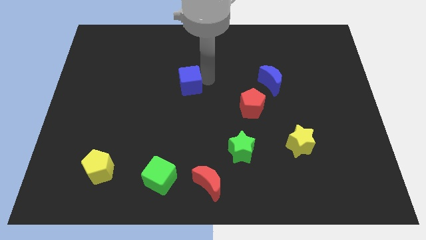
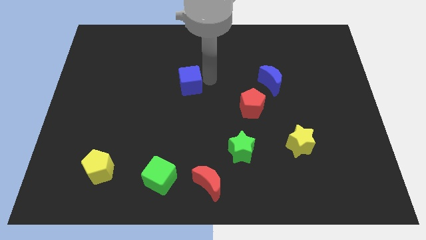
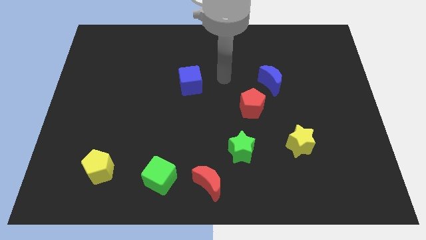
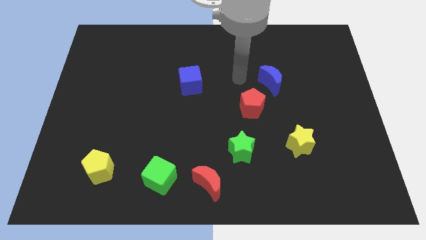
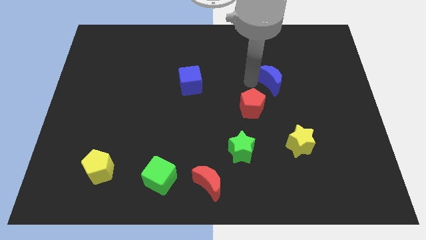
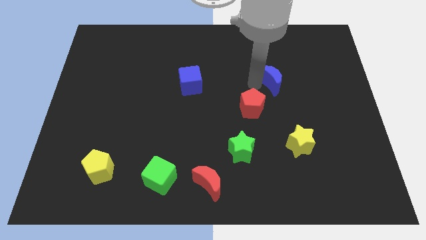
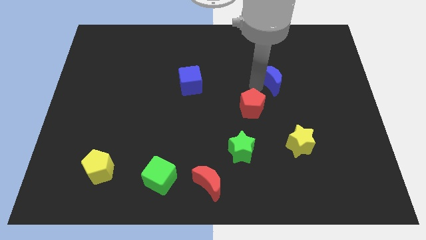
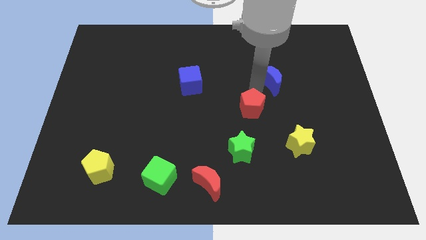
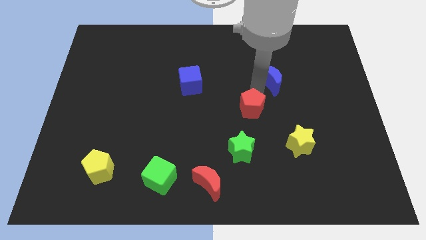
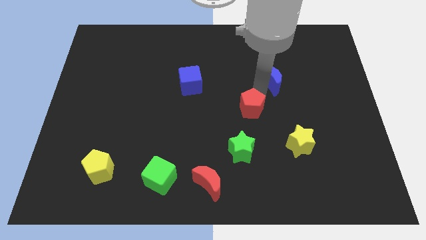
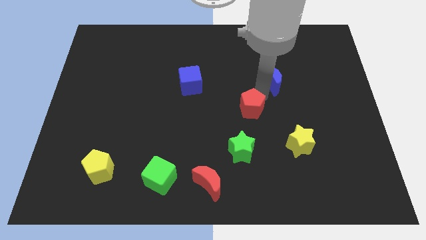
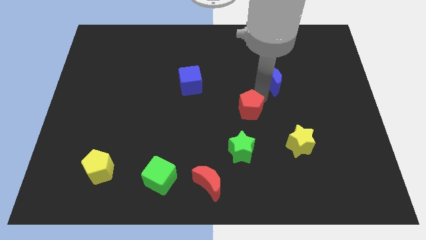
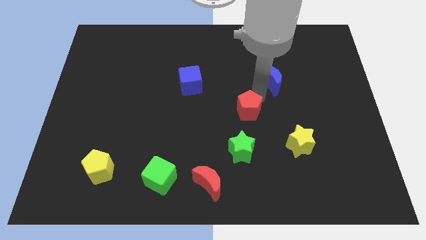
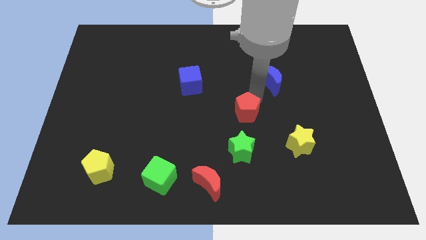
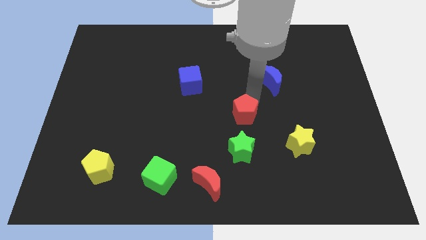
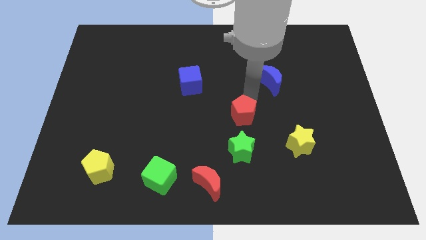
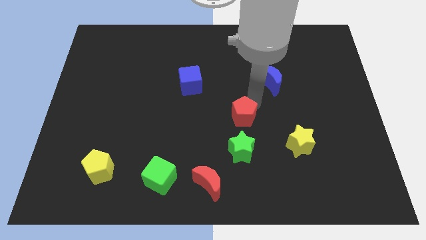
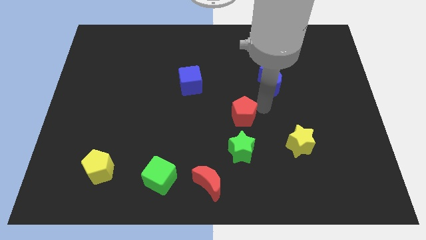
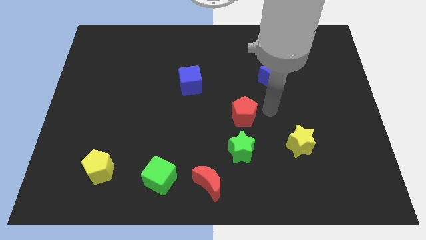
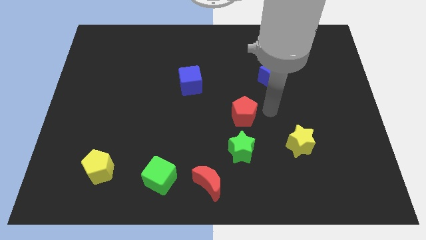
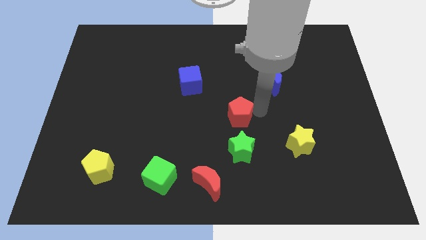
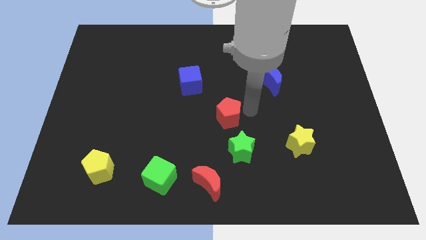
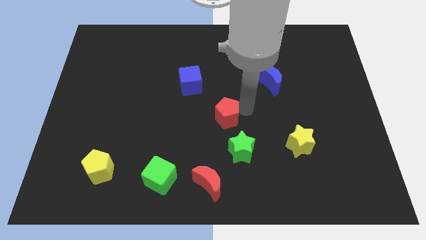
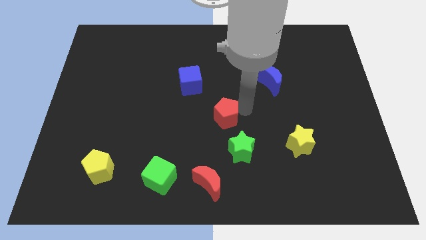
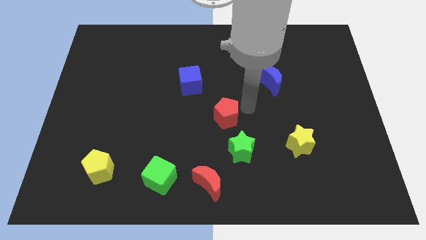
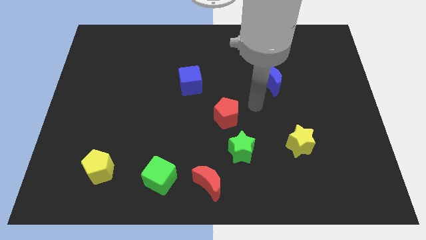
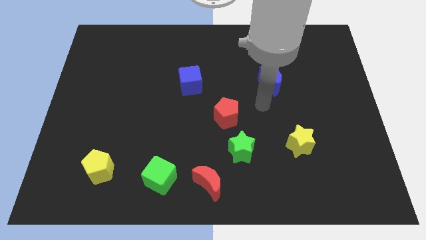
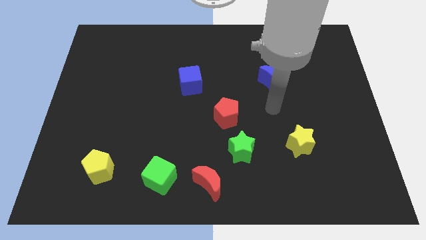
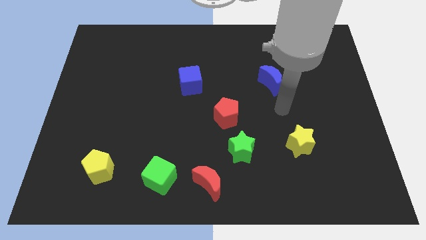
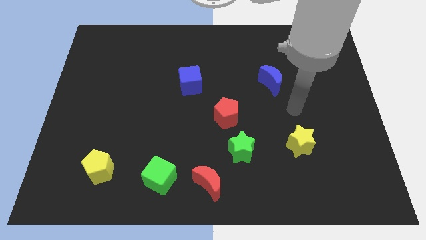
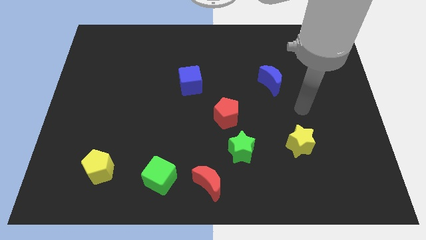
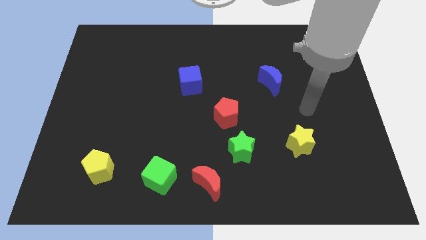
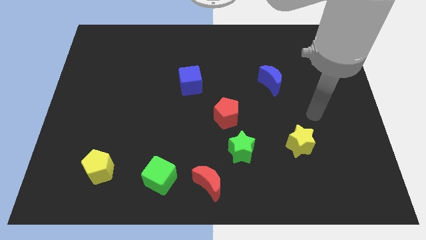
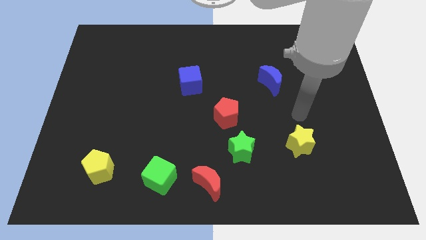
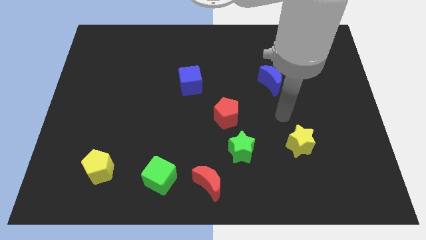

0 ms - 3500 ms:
push the red pentagon towards the center of the board

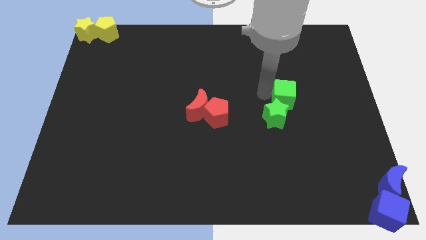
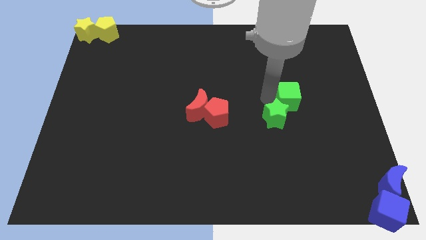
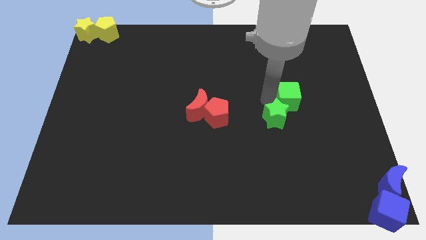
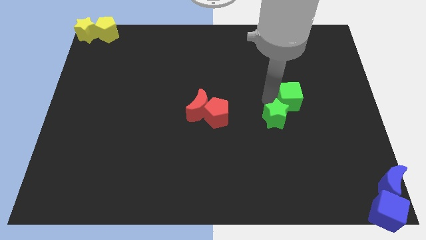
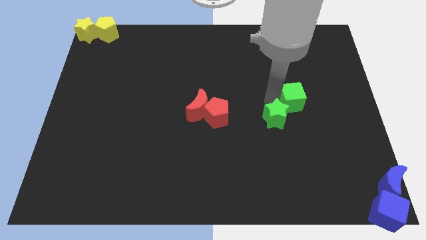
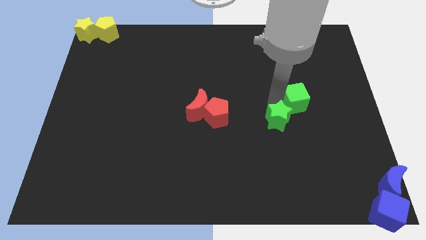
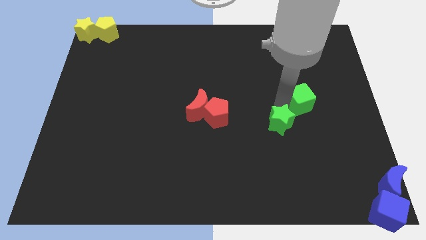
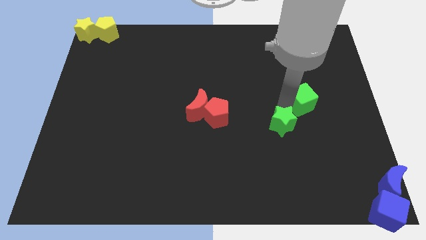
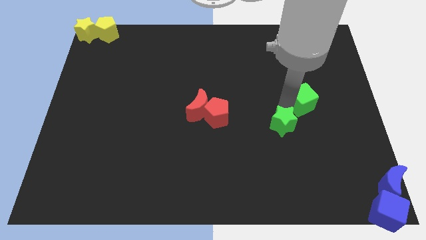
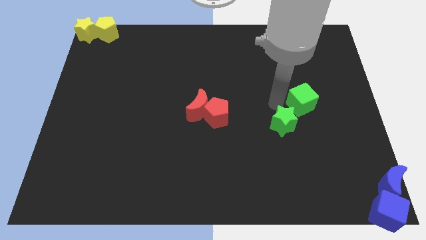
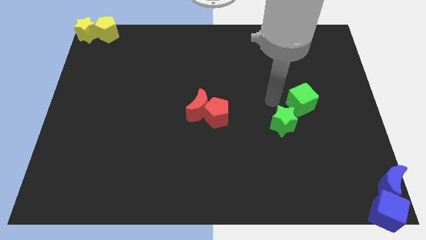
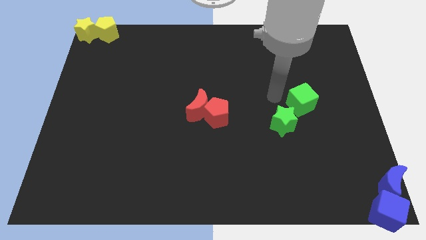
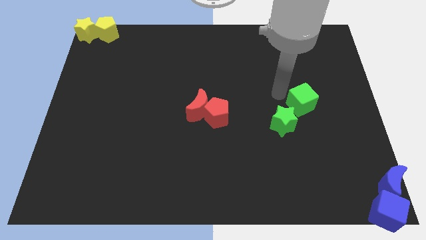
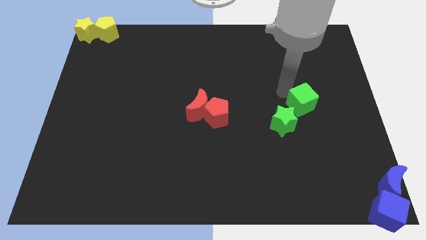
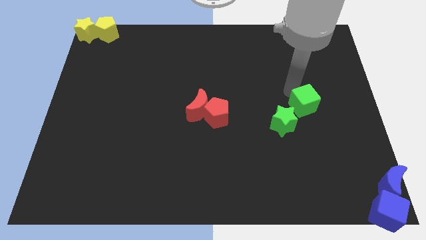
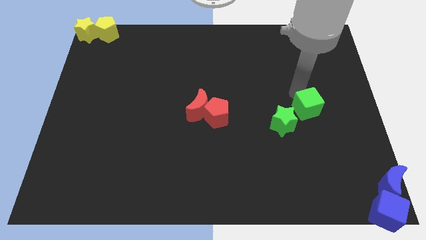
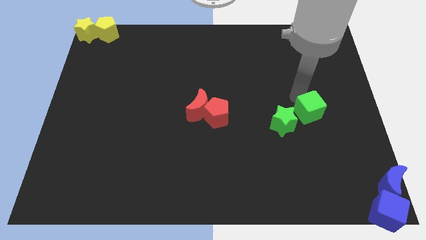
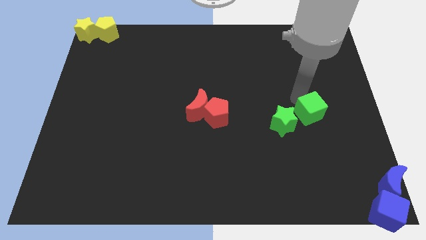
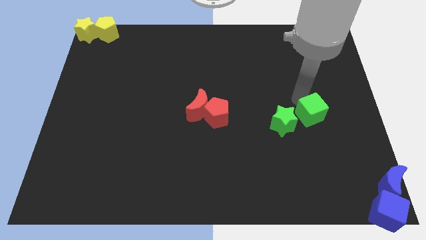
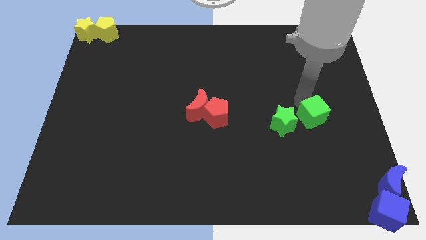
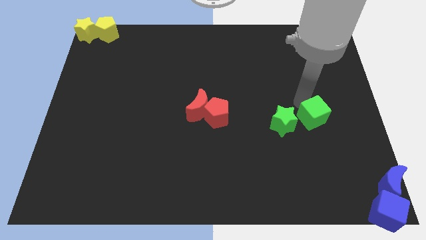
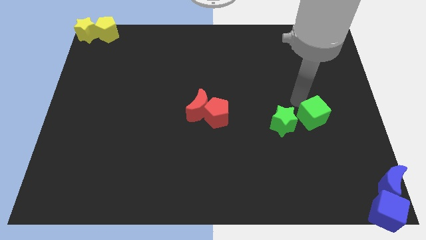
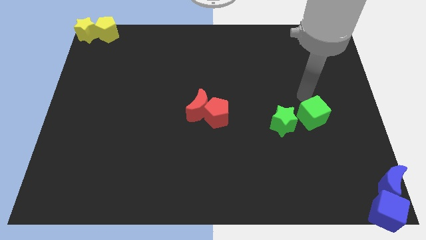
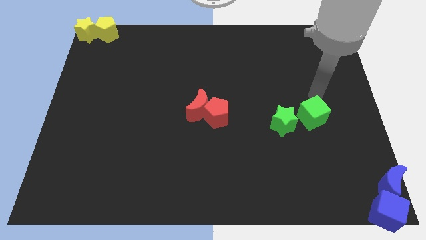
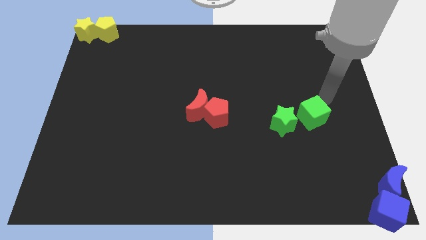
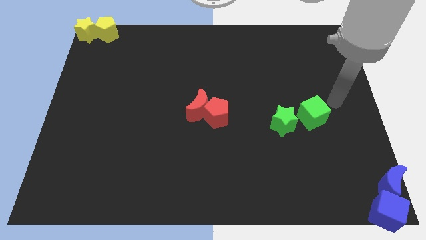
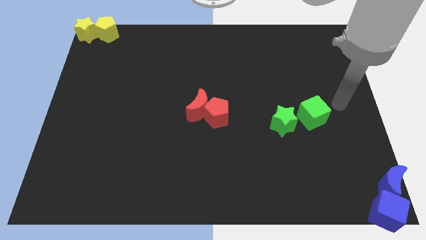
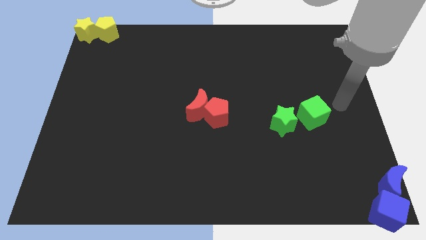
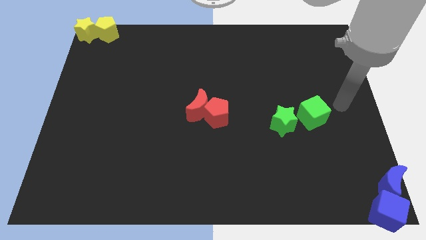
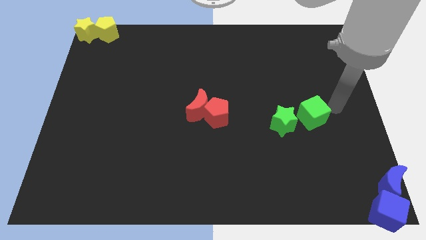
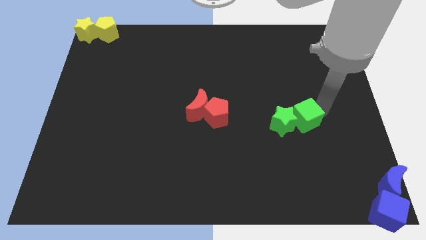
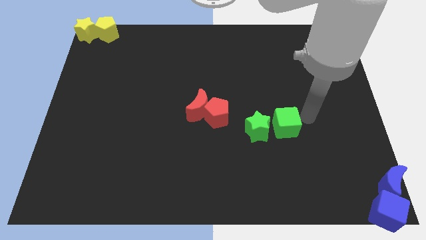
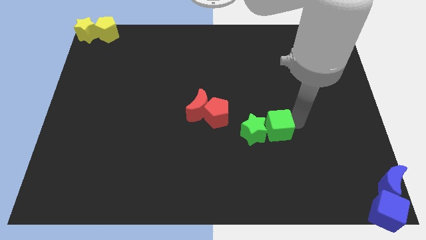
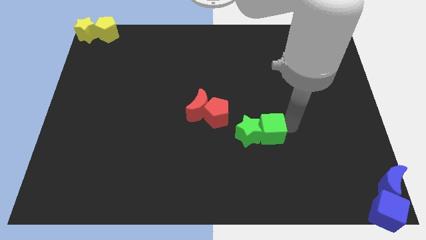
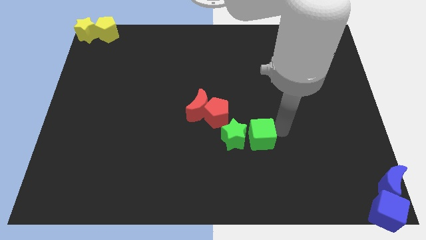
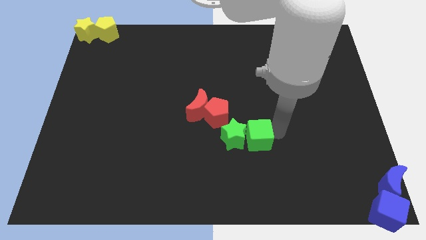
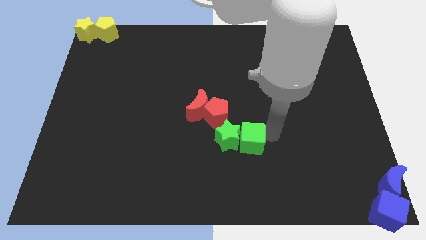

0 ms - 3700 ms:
move the green cube and green star towards the bottom center of the board

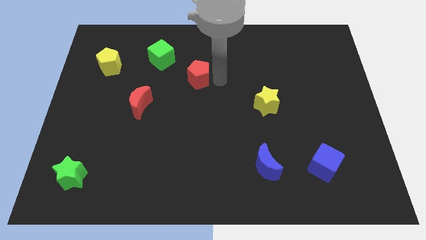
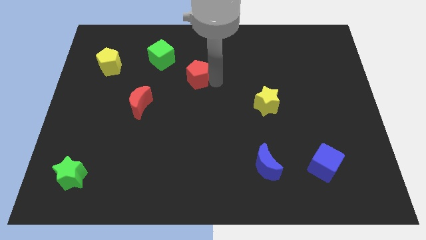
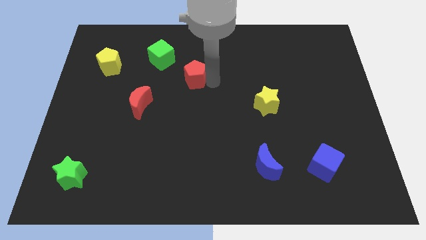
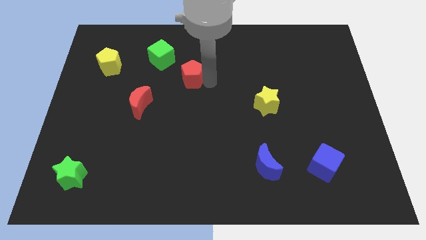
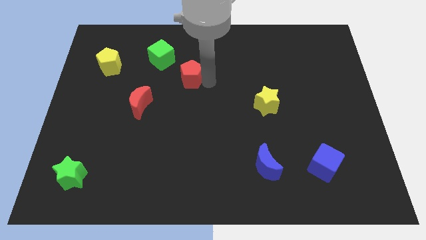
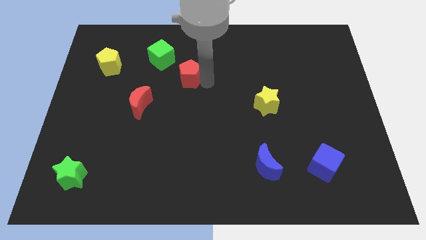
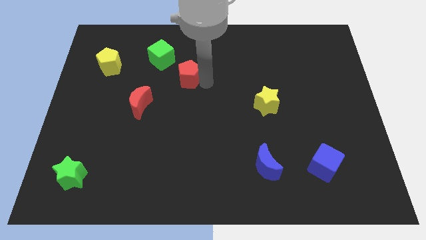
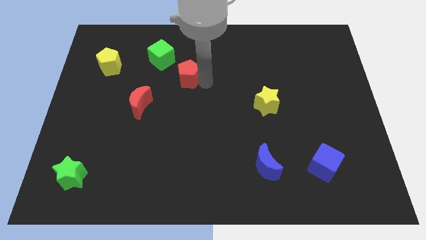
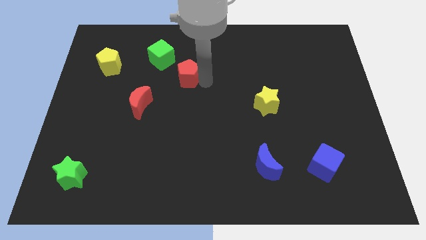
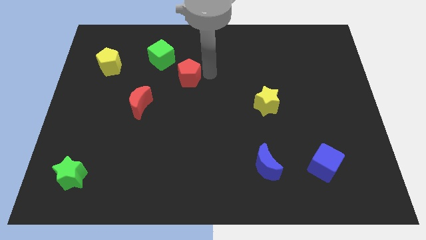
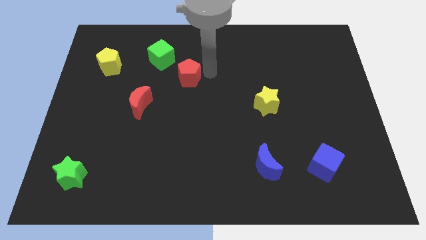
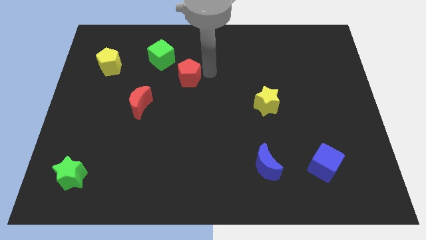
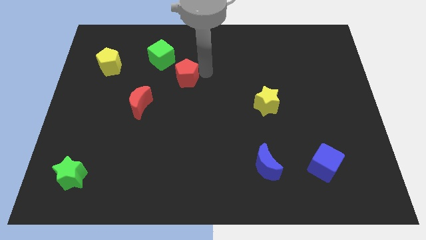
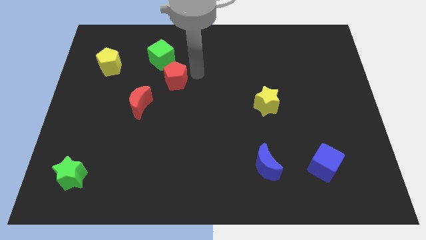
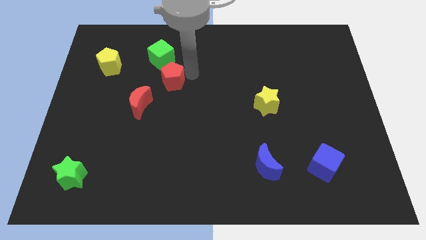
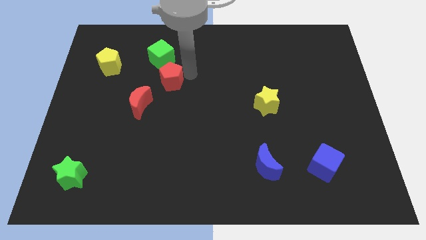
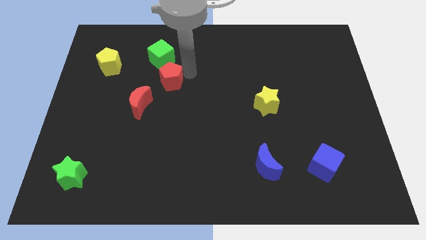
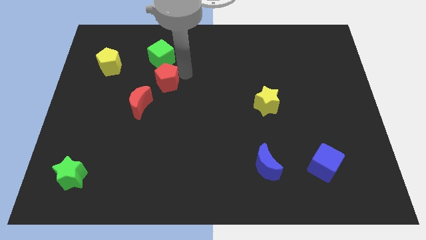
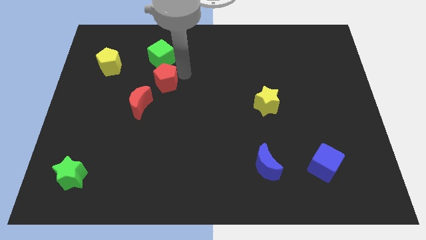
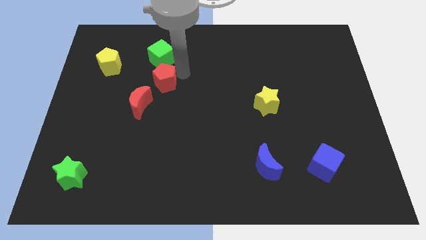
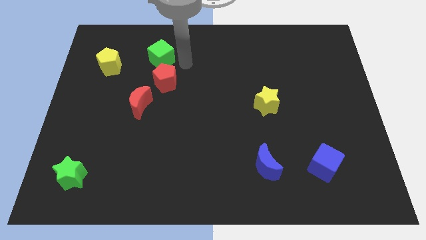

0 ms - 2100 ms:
push the red crescent towards the bottom of the green cube
